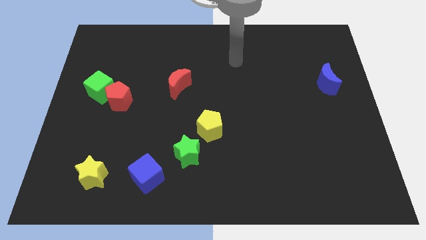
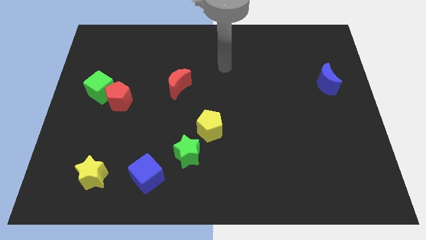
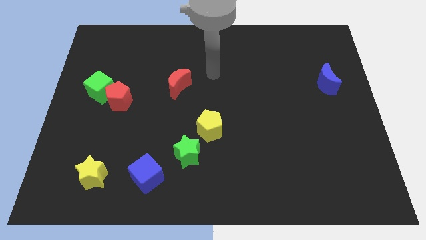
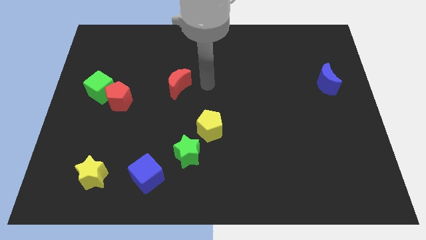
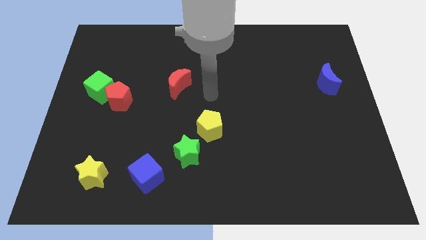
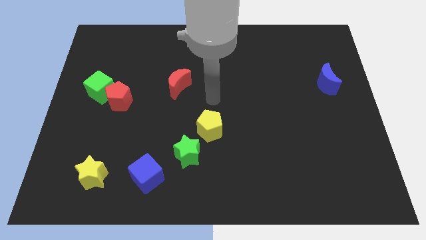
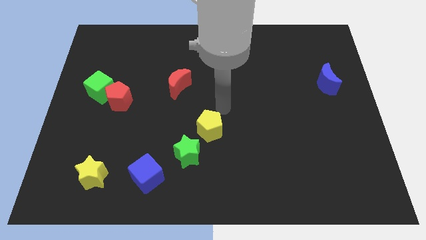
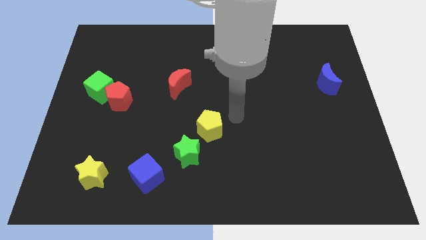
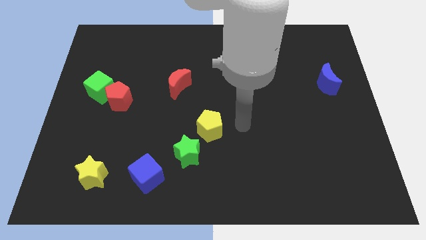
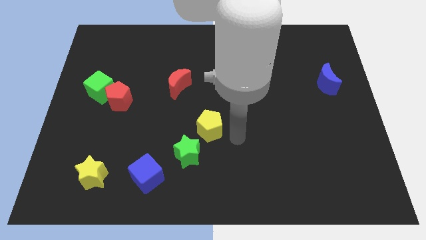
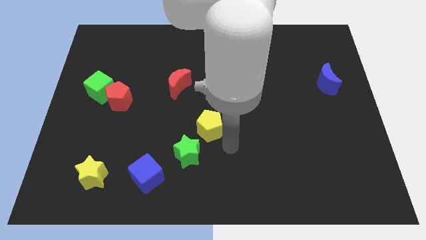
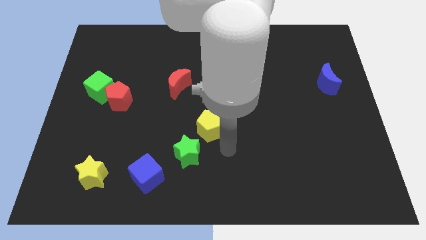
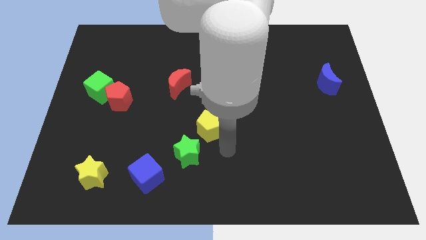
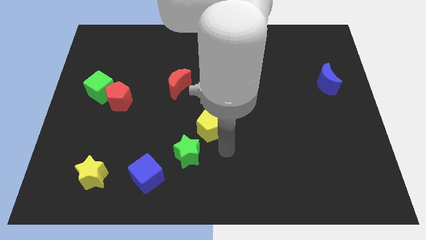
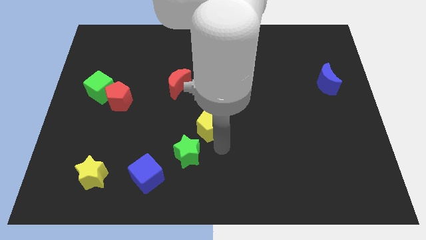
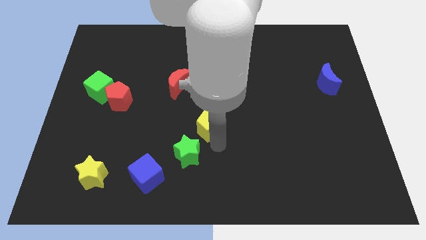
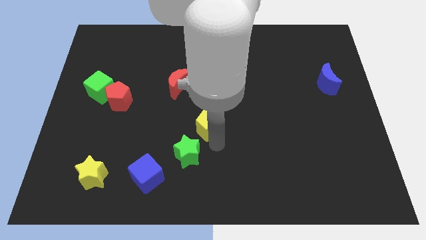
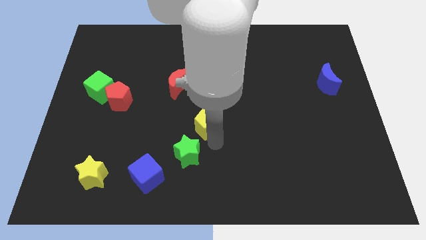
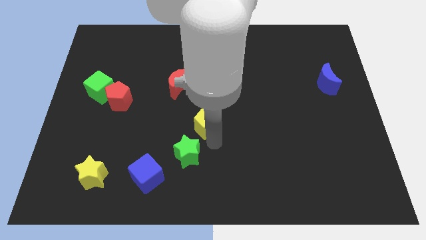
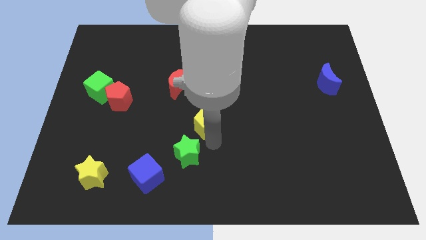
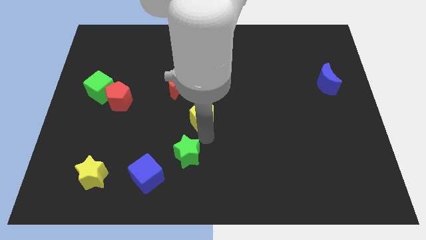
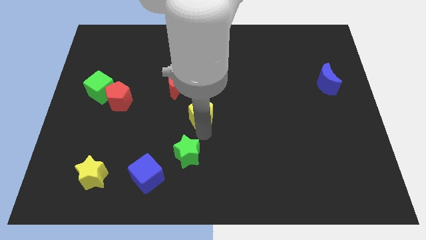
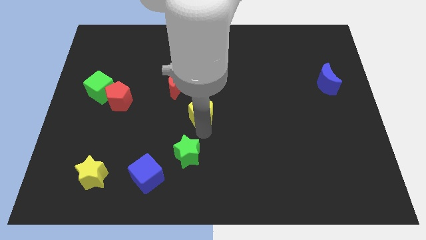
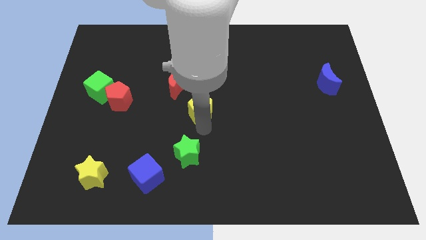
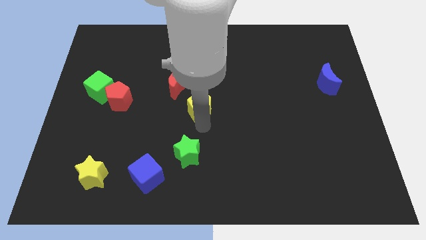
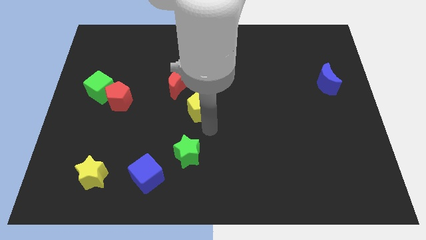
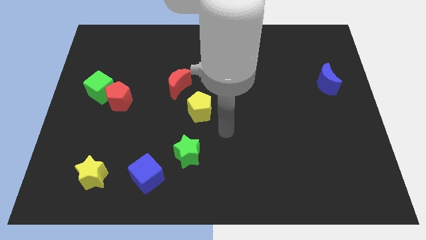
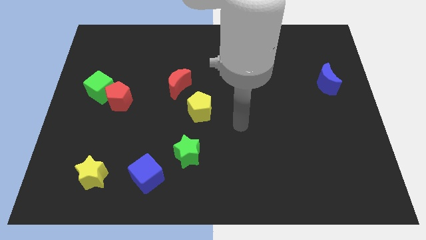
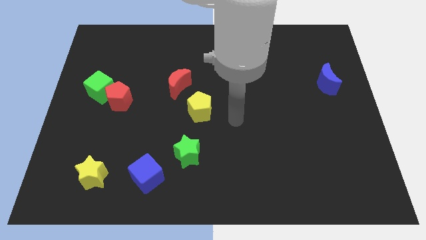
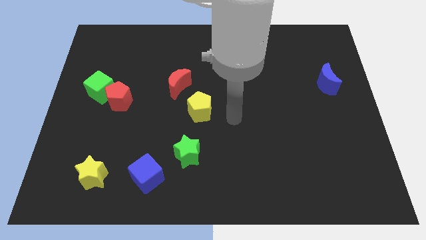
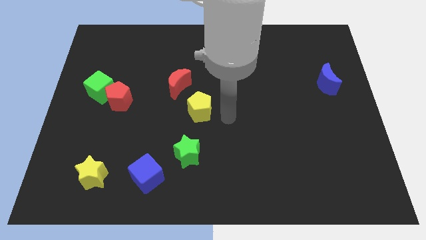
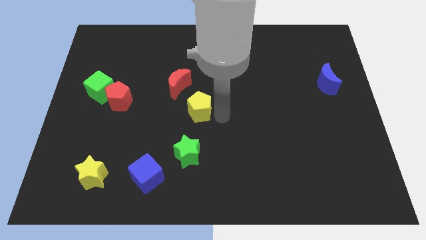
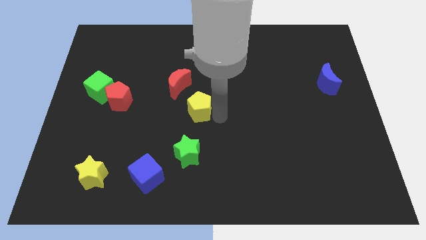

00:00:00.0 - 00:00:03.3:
move the yellow pentagon close to the red crescent

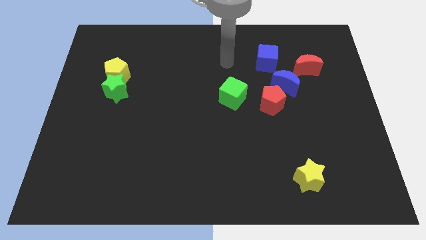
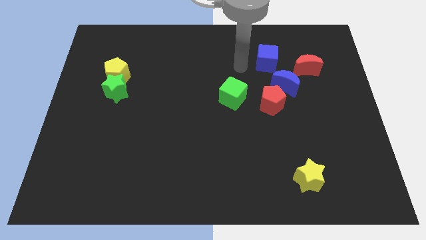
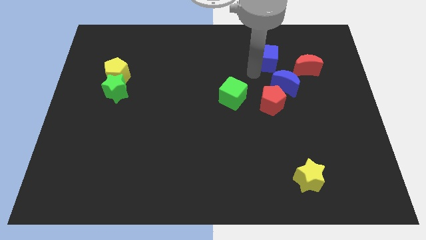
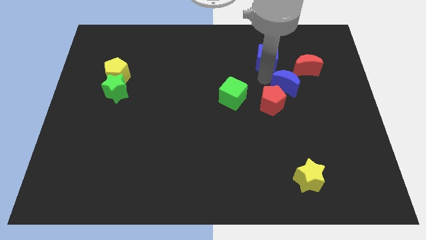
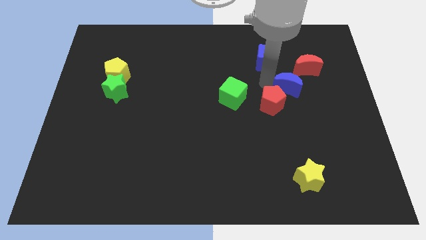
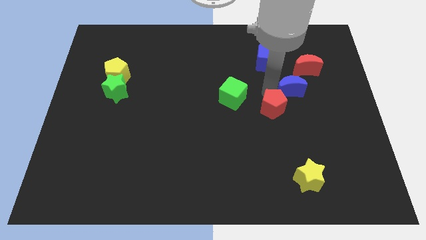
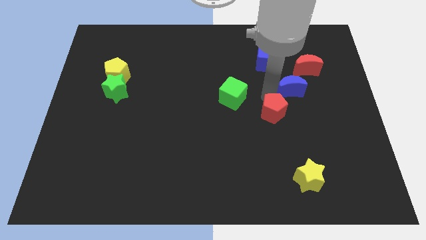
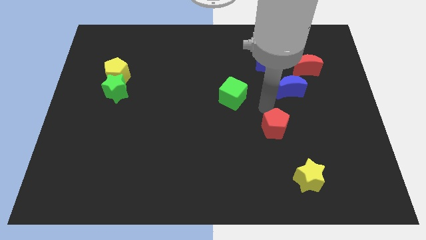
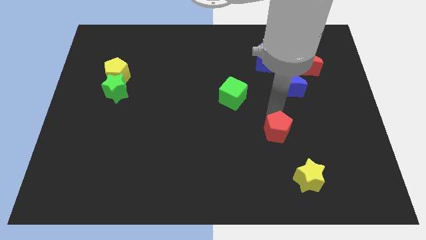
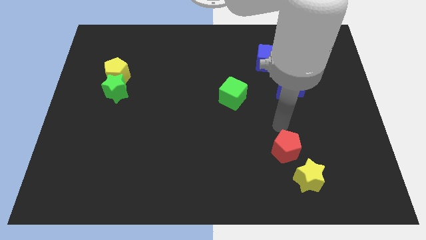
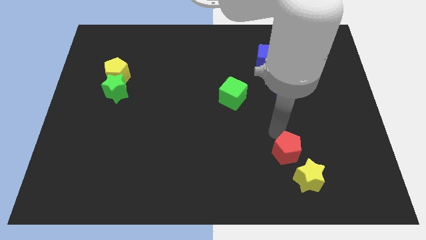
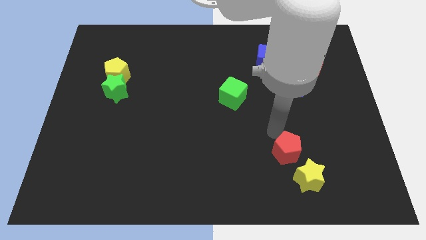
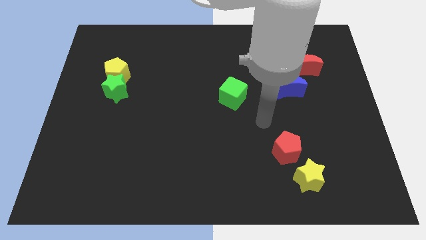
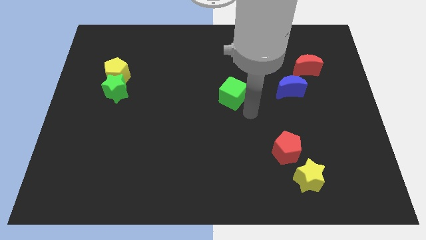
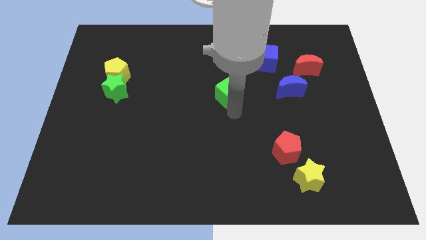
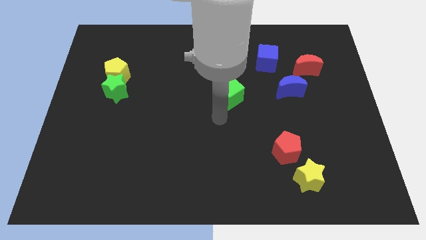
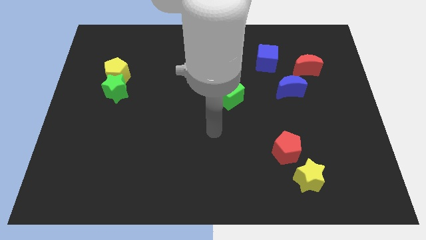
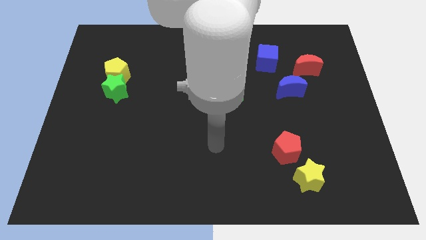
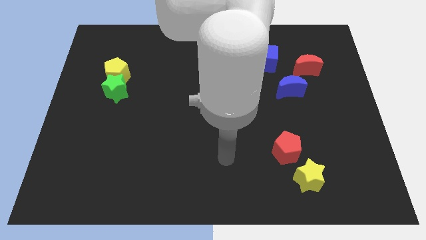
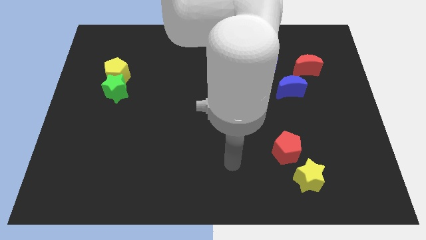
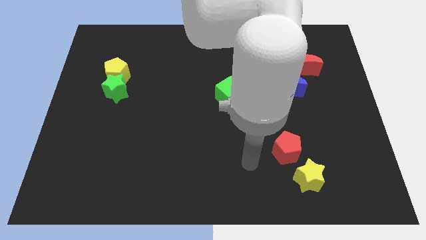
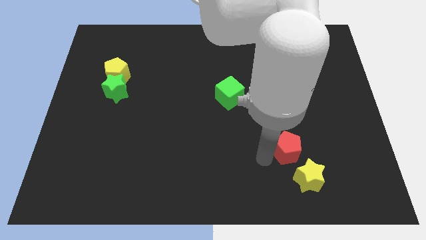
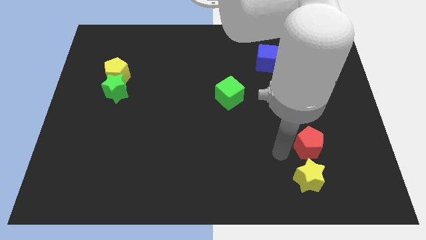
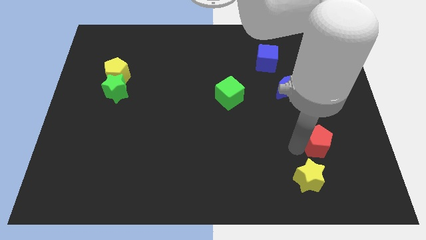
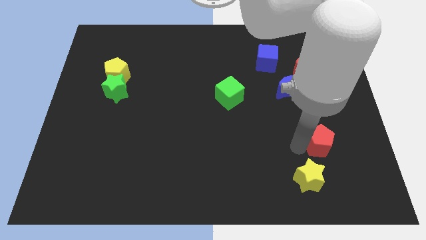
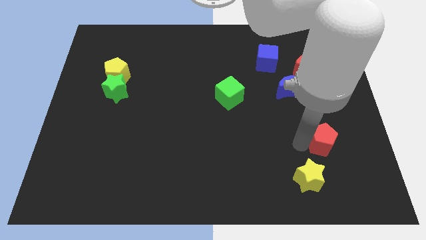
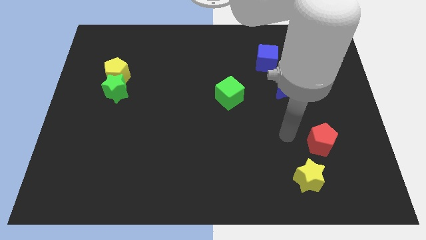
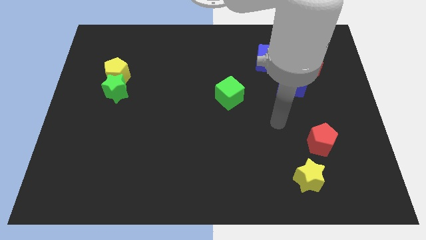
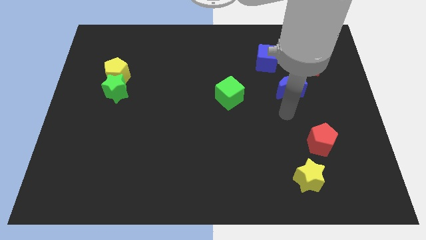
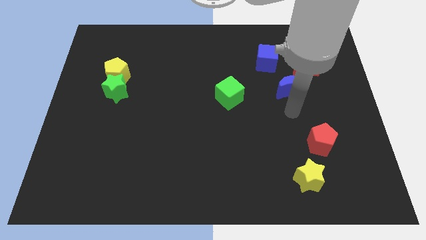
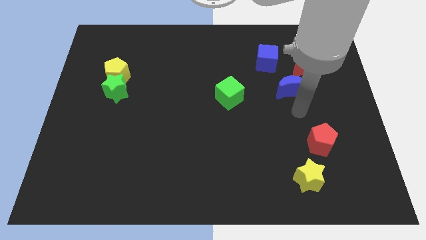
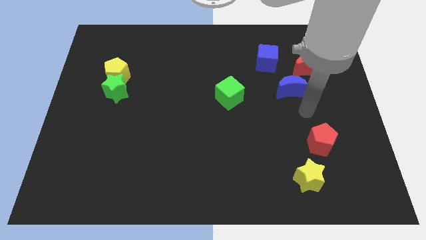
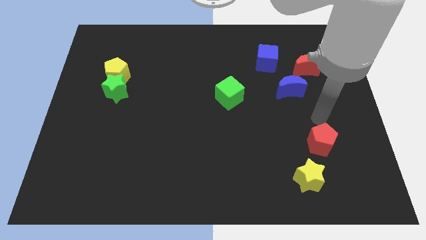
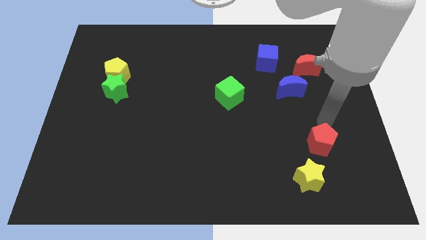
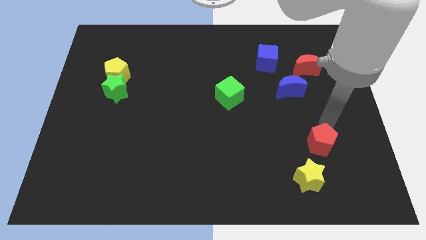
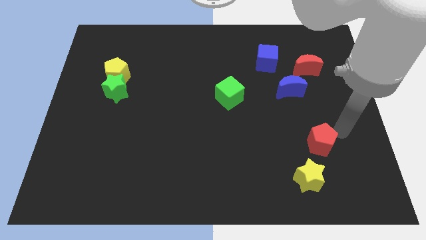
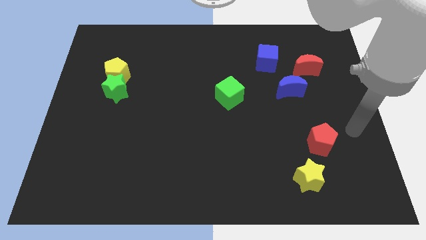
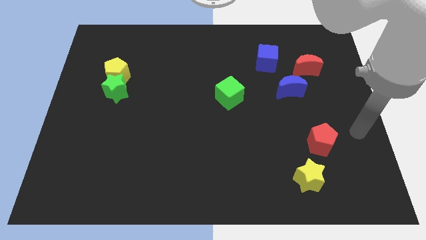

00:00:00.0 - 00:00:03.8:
place the red pentagon at the top right side of yellow star

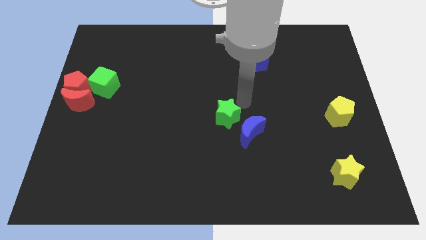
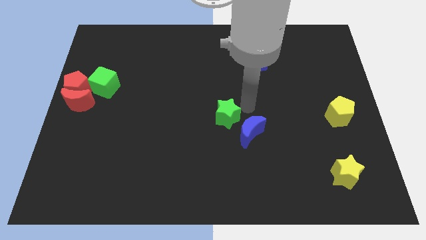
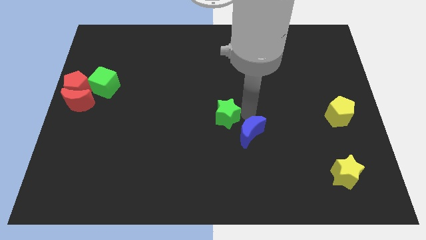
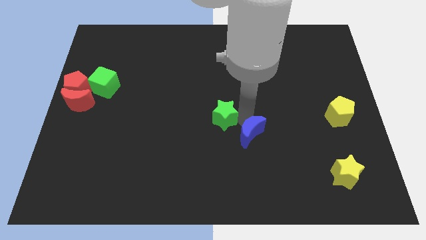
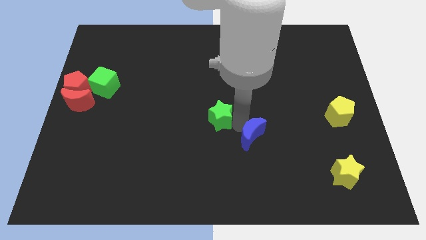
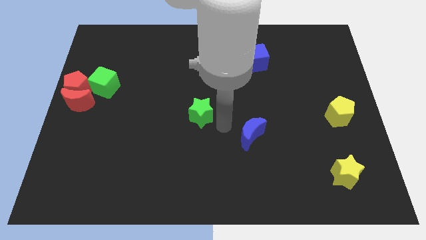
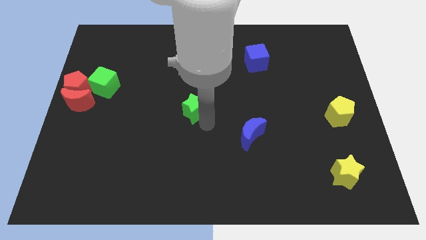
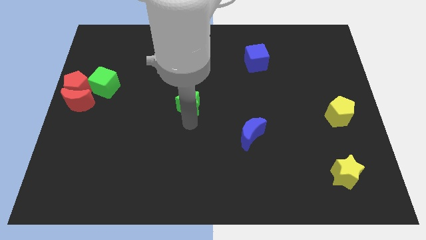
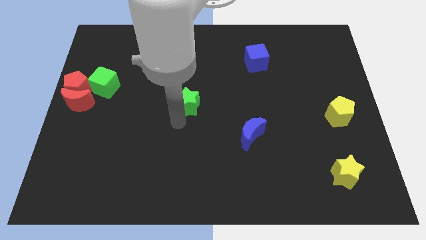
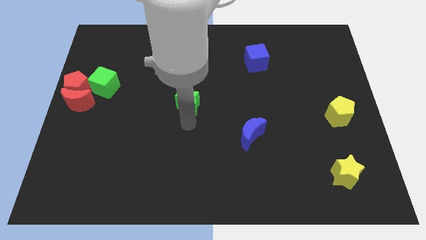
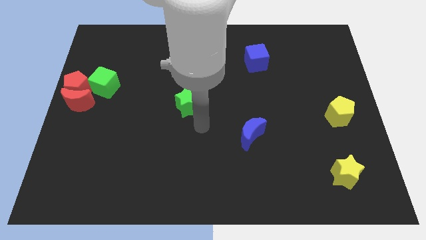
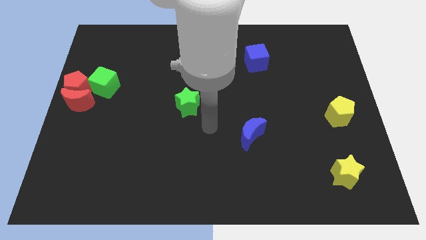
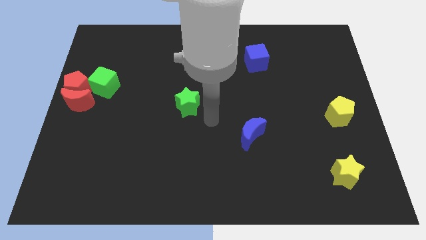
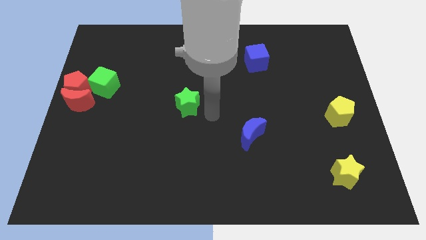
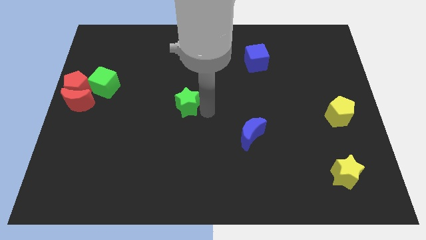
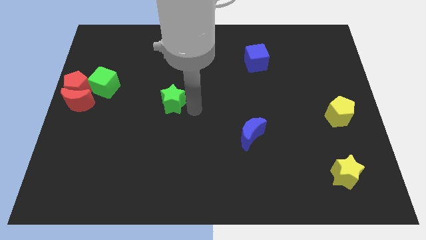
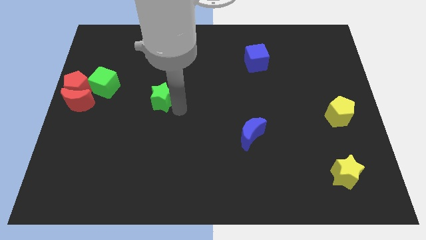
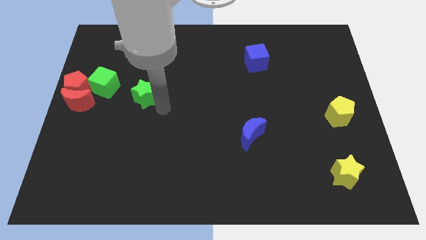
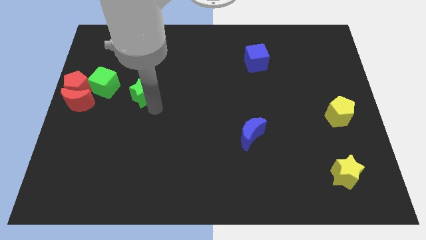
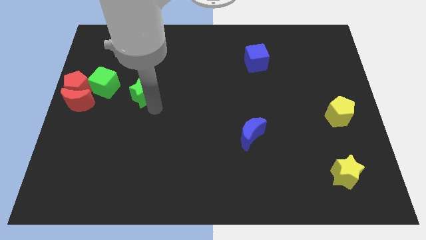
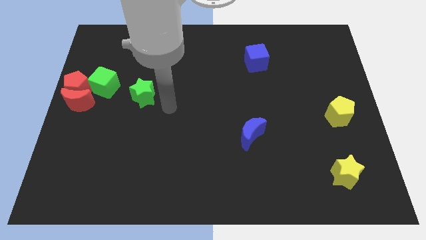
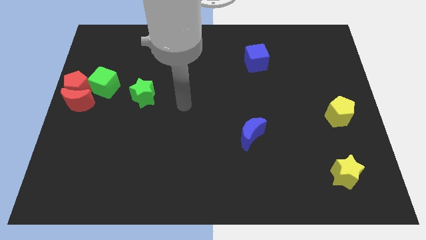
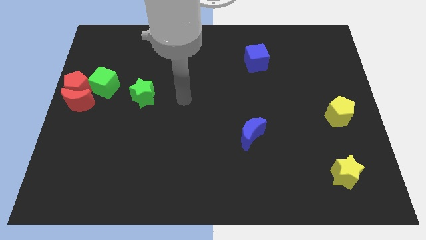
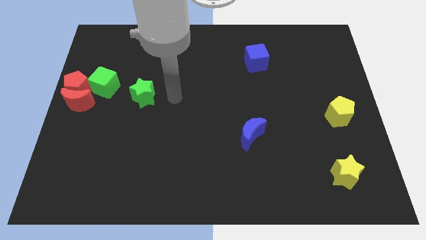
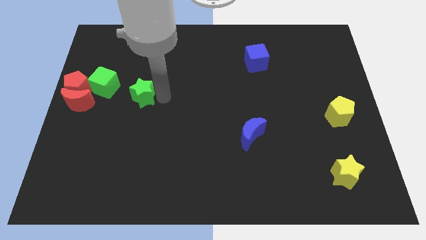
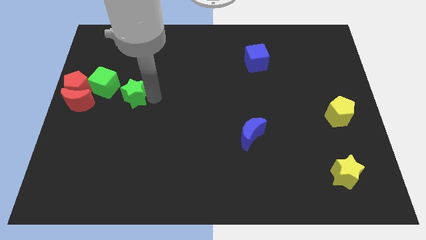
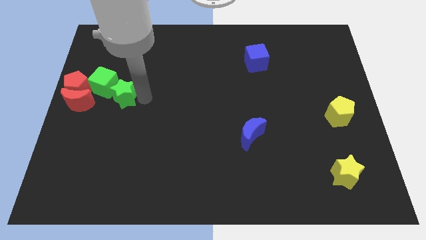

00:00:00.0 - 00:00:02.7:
push the green star into green cube
